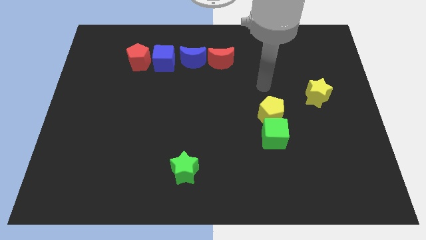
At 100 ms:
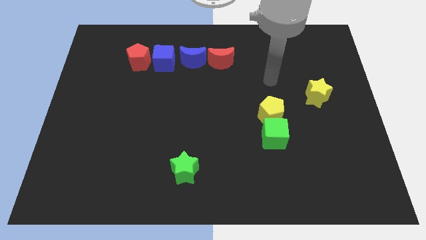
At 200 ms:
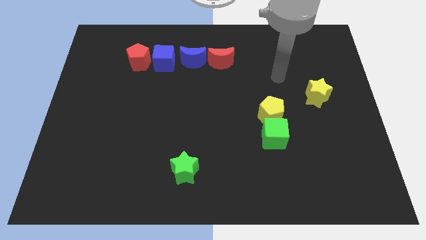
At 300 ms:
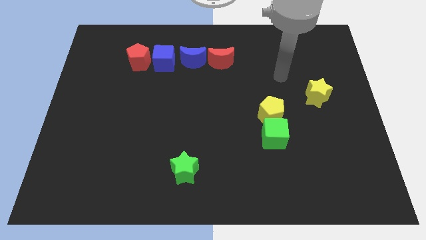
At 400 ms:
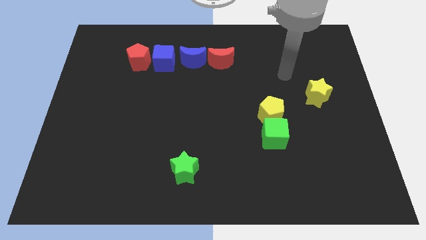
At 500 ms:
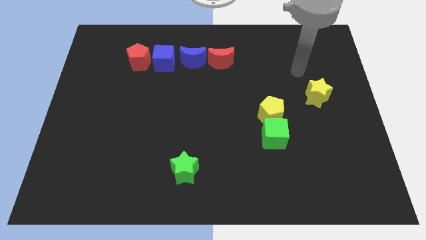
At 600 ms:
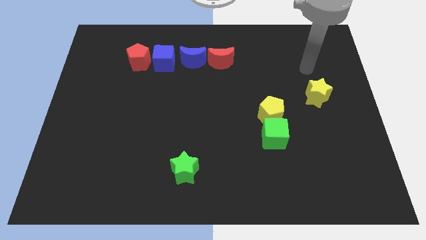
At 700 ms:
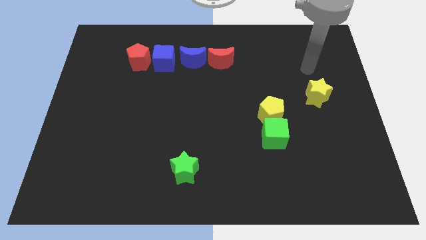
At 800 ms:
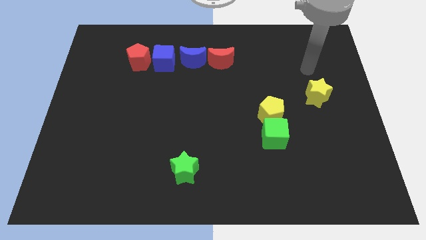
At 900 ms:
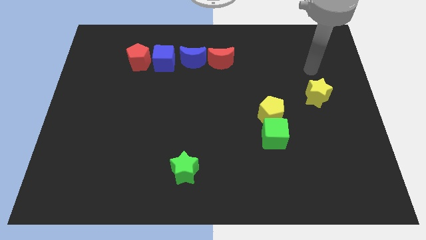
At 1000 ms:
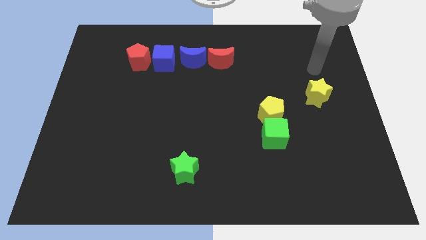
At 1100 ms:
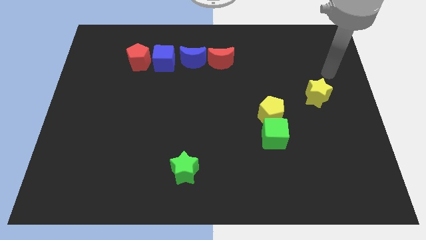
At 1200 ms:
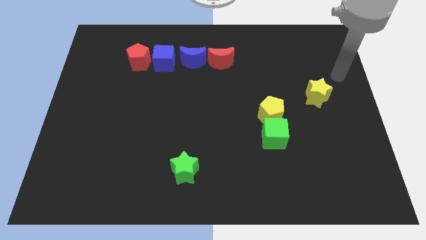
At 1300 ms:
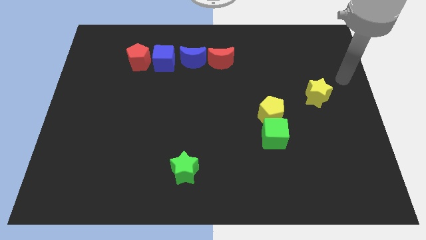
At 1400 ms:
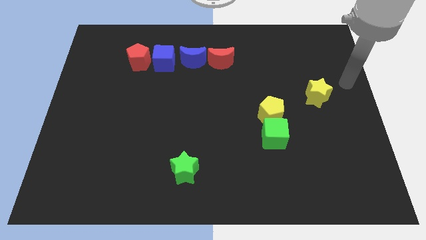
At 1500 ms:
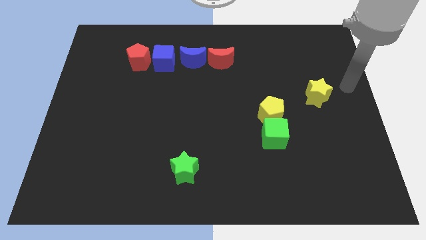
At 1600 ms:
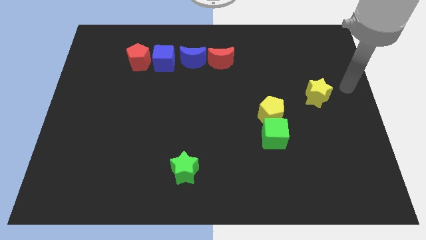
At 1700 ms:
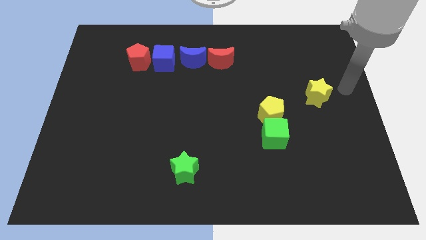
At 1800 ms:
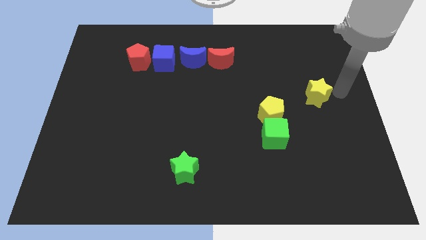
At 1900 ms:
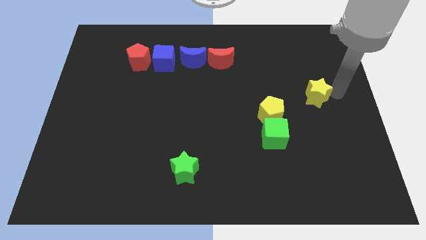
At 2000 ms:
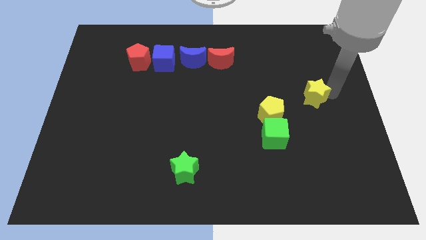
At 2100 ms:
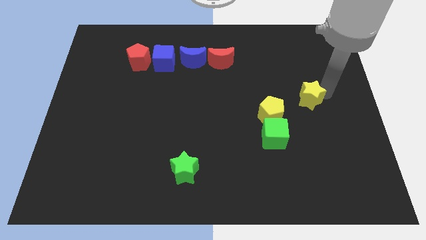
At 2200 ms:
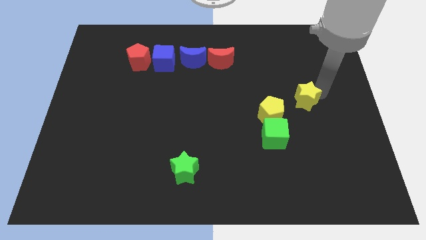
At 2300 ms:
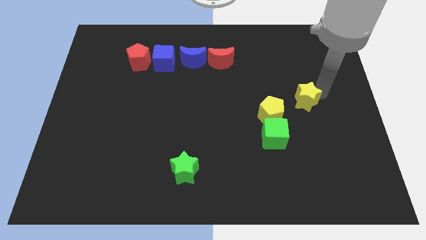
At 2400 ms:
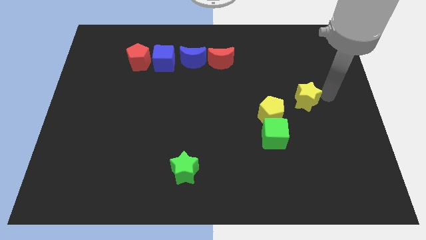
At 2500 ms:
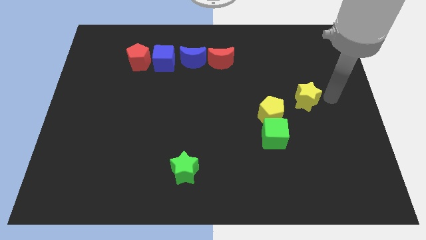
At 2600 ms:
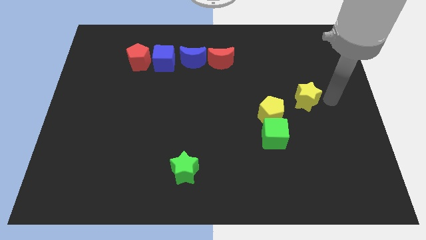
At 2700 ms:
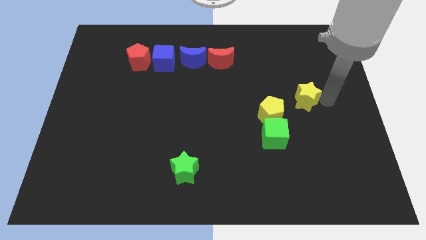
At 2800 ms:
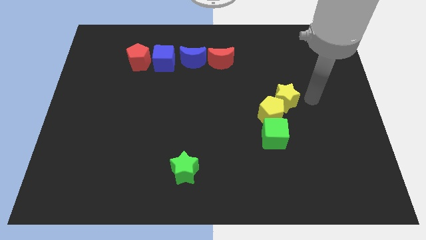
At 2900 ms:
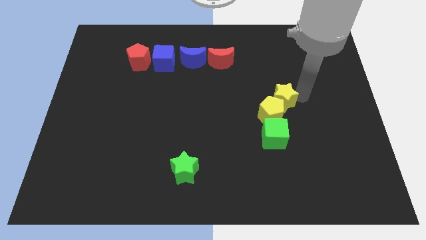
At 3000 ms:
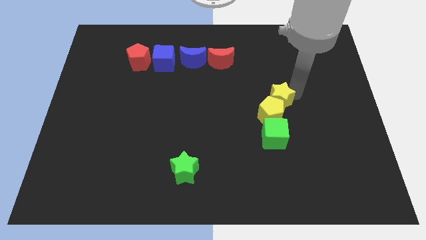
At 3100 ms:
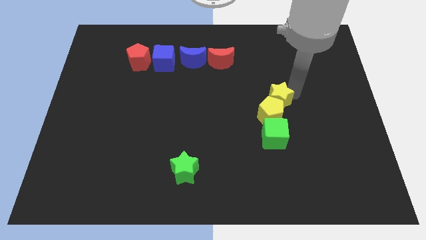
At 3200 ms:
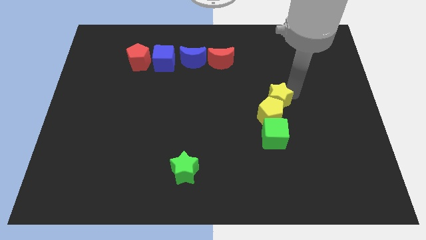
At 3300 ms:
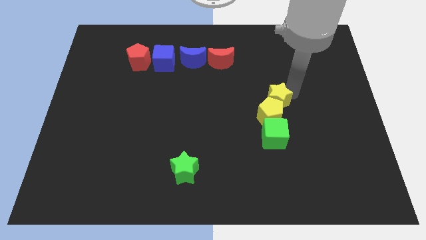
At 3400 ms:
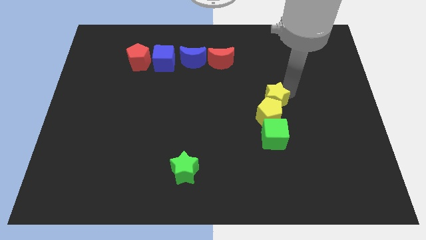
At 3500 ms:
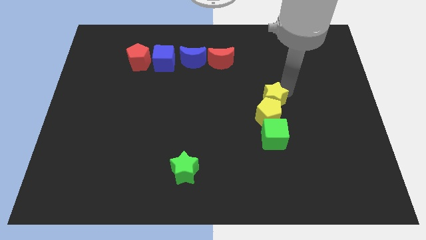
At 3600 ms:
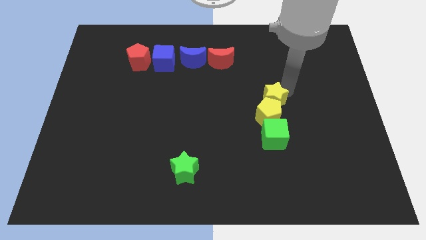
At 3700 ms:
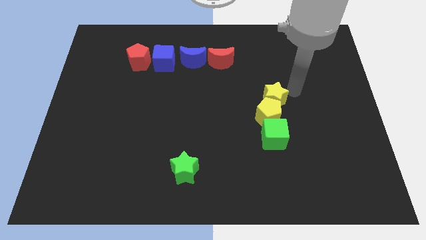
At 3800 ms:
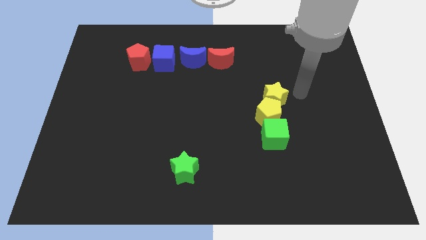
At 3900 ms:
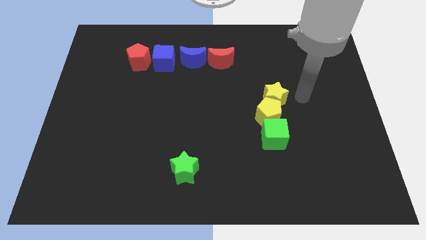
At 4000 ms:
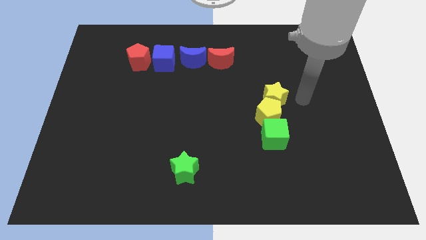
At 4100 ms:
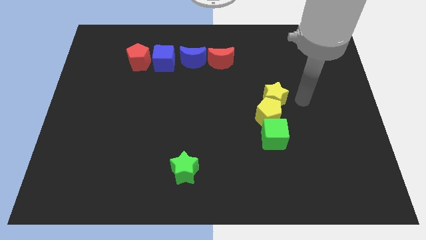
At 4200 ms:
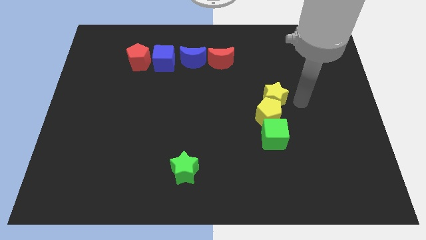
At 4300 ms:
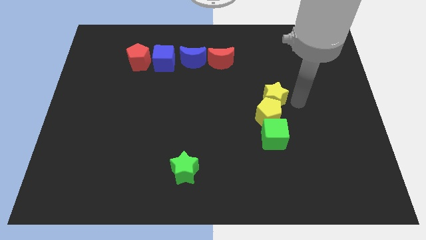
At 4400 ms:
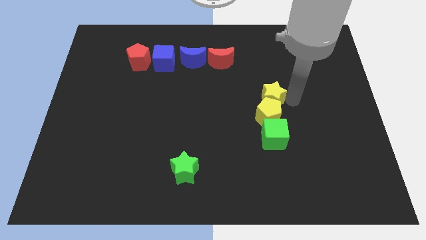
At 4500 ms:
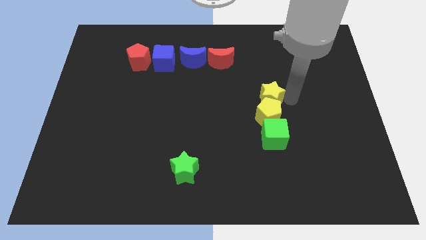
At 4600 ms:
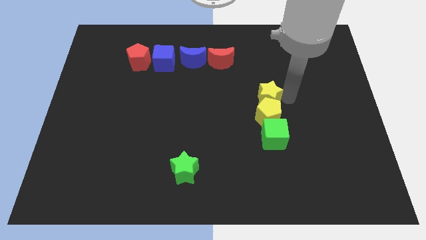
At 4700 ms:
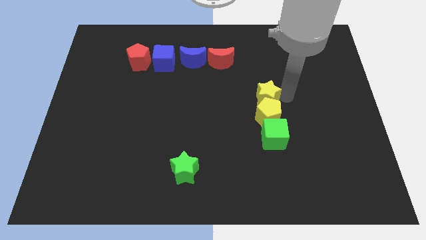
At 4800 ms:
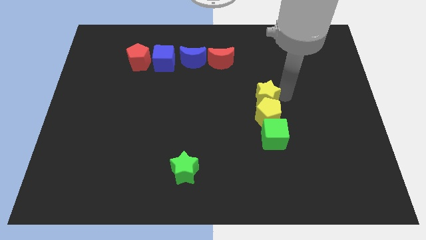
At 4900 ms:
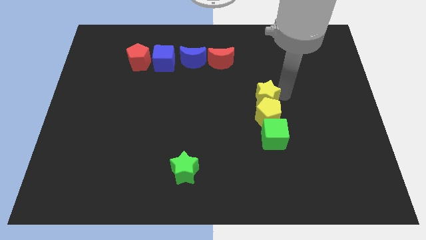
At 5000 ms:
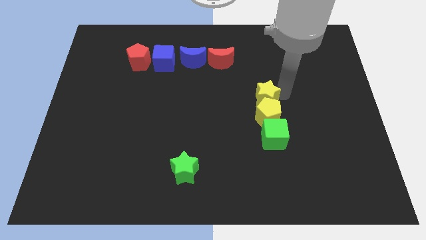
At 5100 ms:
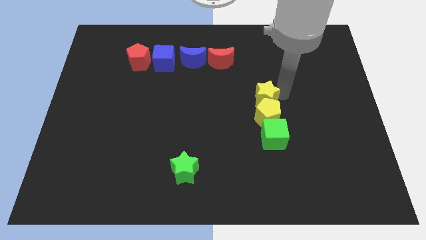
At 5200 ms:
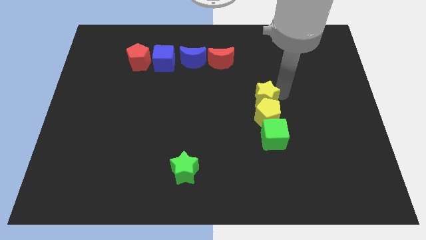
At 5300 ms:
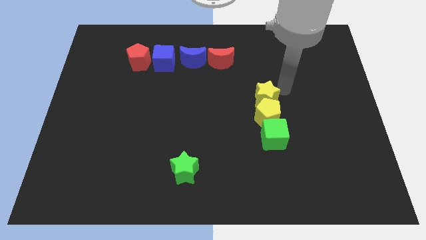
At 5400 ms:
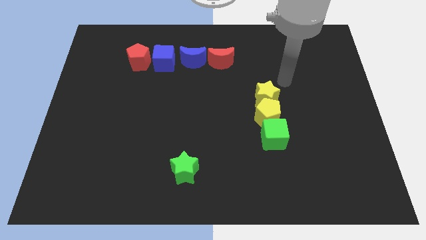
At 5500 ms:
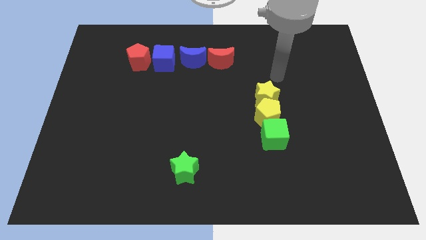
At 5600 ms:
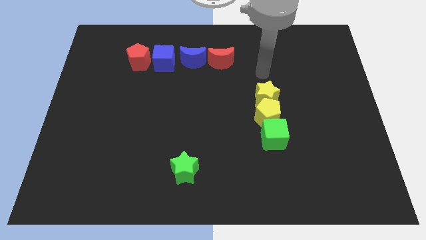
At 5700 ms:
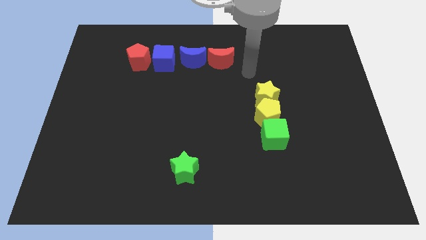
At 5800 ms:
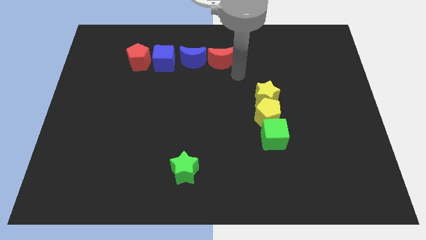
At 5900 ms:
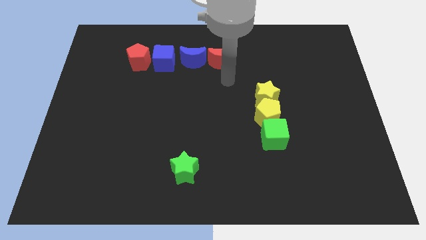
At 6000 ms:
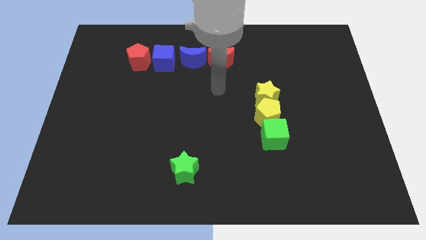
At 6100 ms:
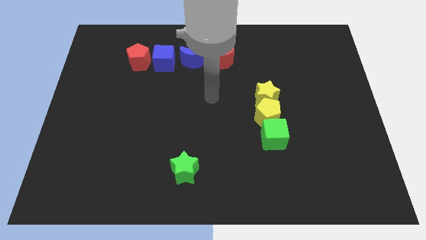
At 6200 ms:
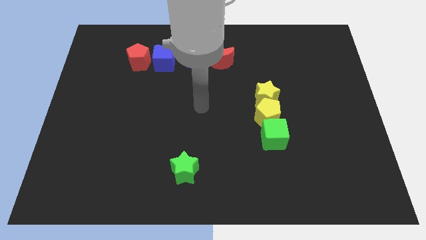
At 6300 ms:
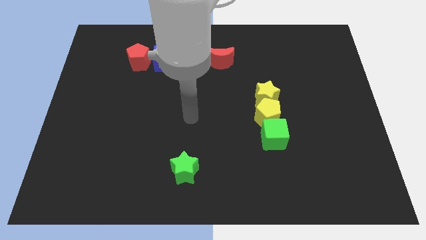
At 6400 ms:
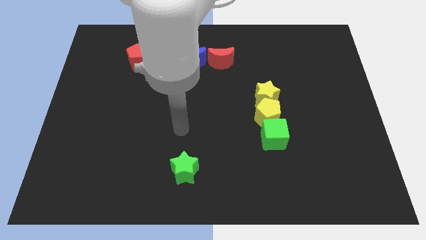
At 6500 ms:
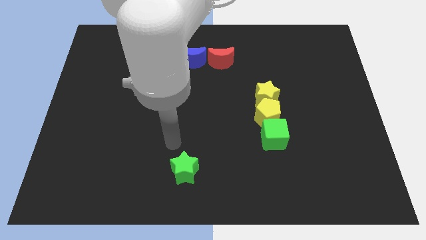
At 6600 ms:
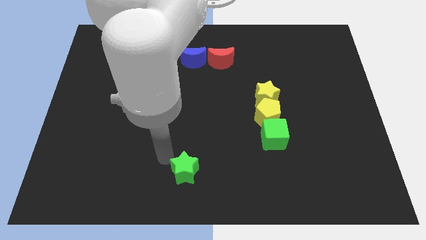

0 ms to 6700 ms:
move the yellow star into the yellow pentagon

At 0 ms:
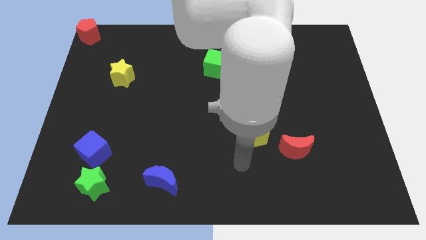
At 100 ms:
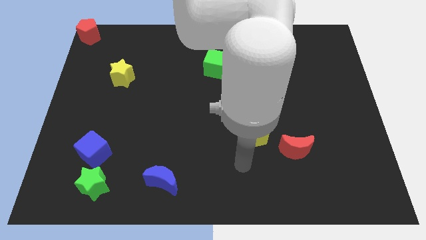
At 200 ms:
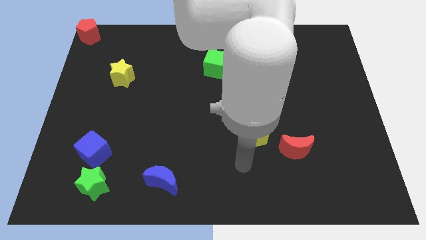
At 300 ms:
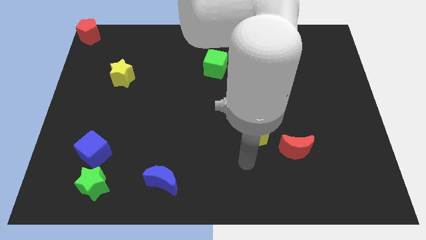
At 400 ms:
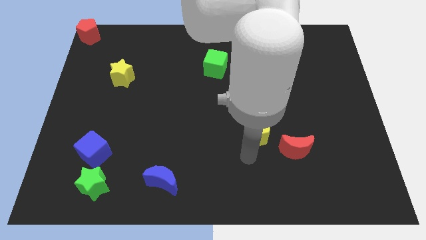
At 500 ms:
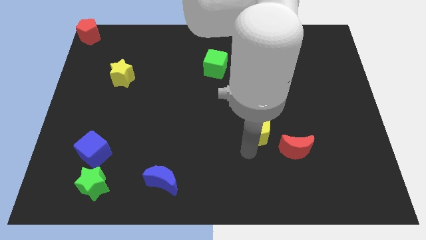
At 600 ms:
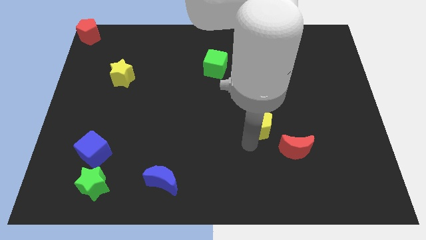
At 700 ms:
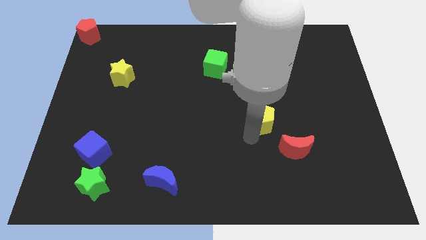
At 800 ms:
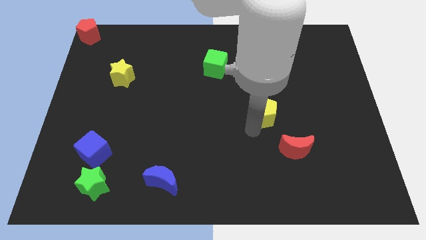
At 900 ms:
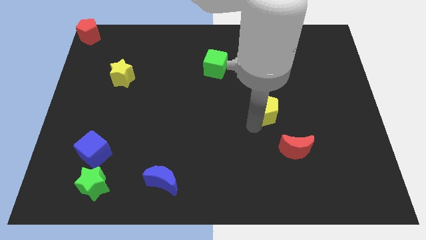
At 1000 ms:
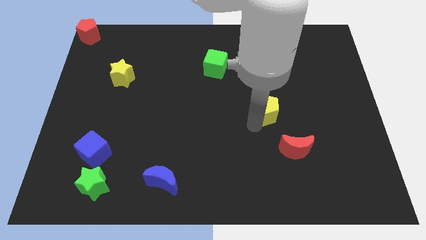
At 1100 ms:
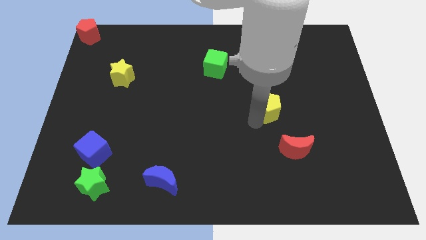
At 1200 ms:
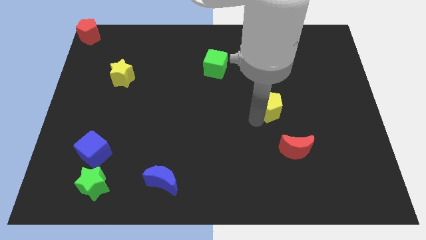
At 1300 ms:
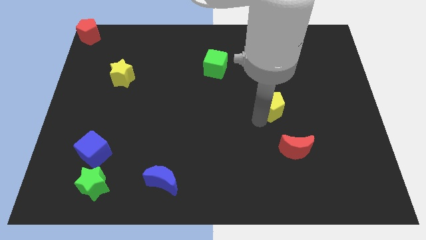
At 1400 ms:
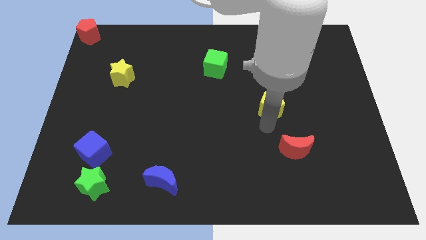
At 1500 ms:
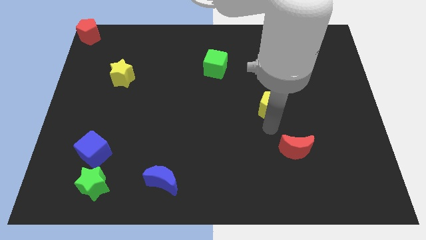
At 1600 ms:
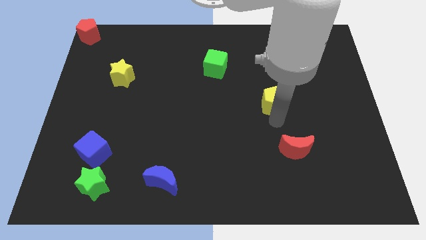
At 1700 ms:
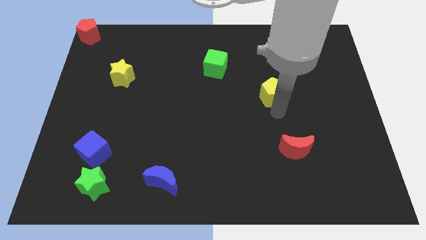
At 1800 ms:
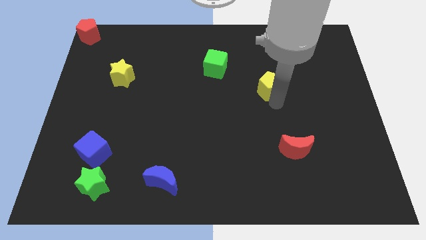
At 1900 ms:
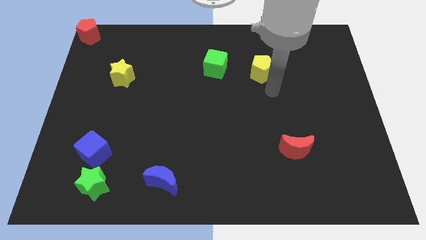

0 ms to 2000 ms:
place the yellow pentagon right to the green cube

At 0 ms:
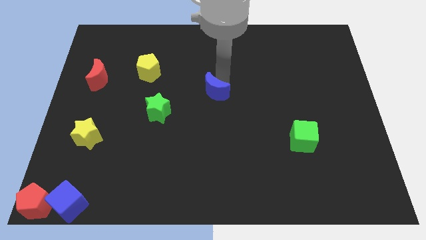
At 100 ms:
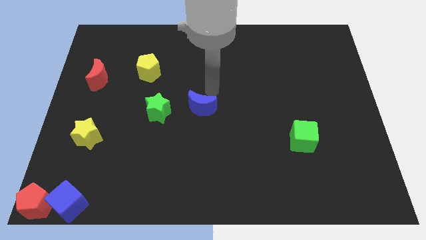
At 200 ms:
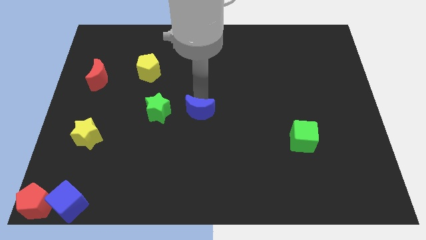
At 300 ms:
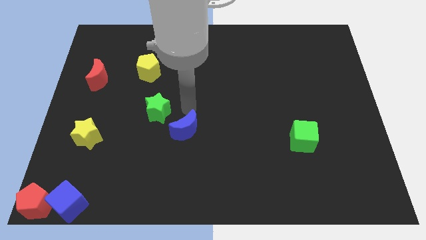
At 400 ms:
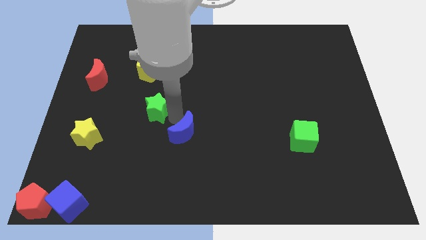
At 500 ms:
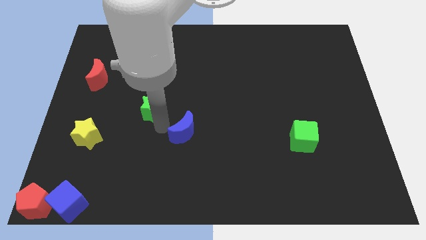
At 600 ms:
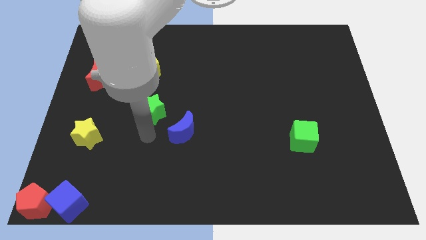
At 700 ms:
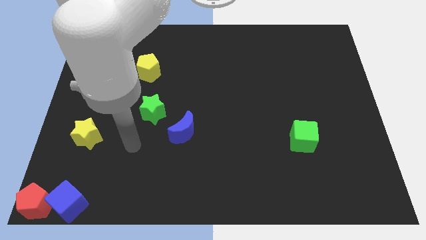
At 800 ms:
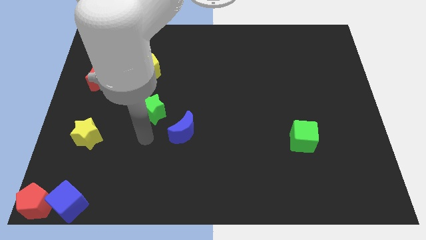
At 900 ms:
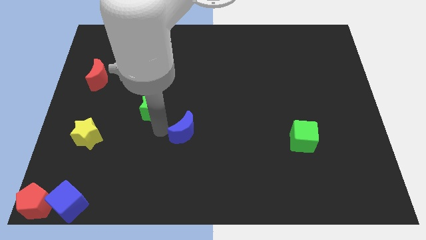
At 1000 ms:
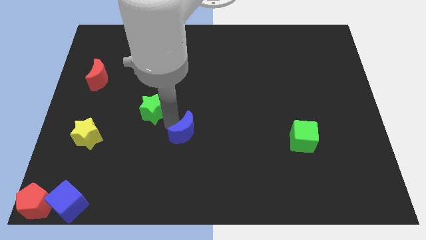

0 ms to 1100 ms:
place the blue moon below the green star
